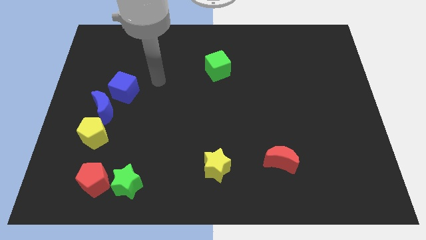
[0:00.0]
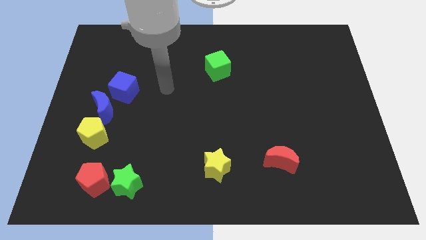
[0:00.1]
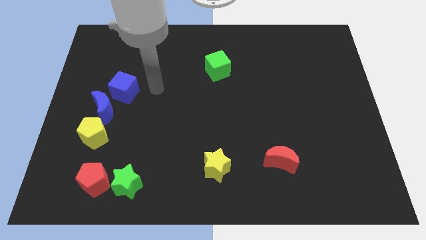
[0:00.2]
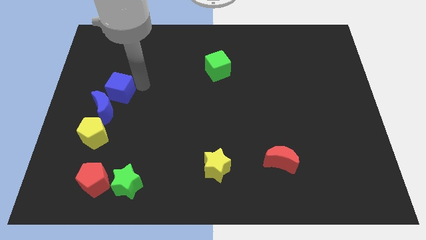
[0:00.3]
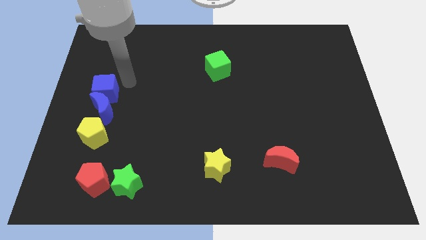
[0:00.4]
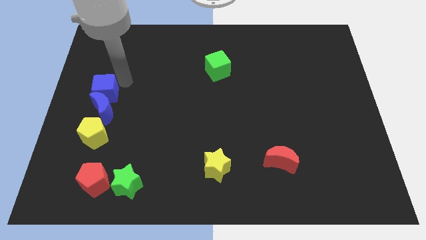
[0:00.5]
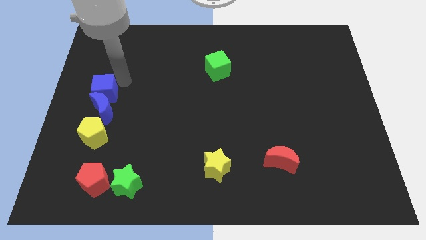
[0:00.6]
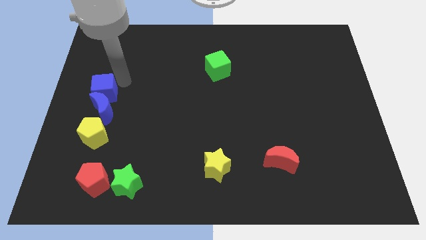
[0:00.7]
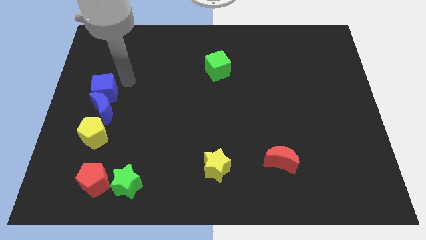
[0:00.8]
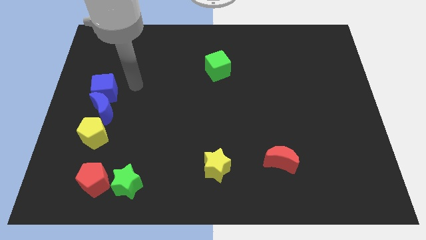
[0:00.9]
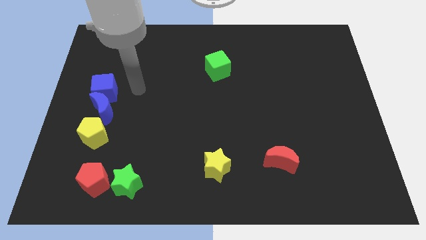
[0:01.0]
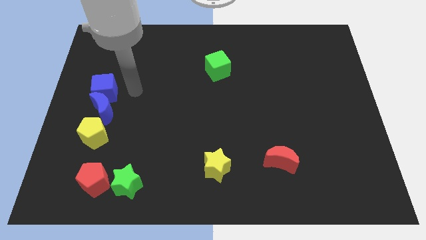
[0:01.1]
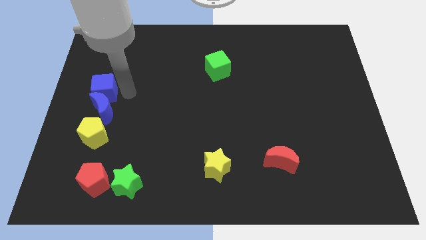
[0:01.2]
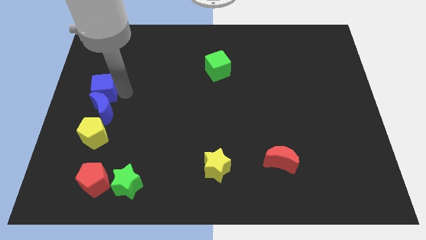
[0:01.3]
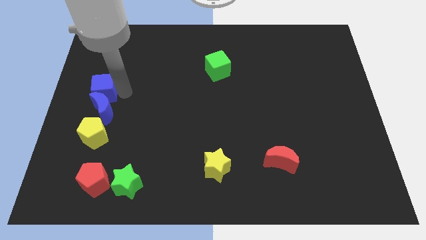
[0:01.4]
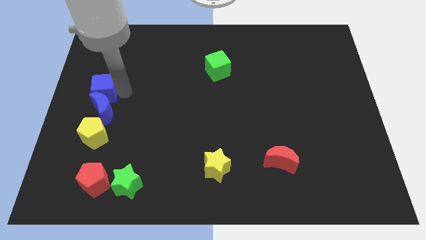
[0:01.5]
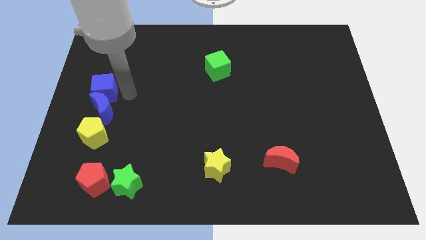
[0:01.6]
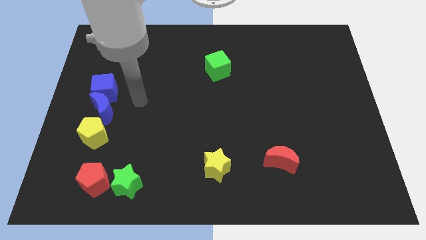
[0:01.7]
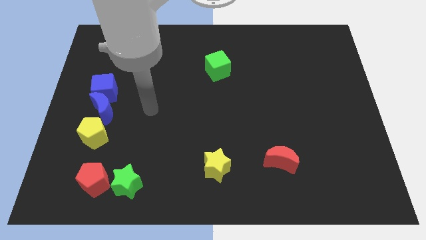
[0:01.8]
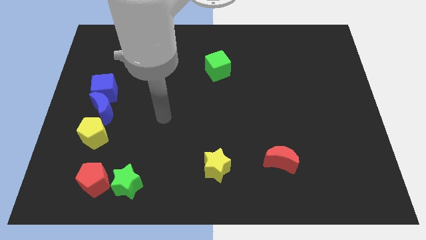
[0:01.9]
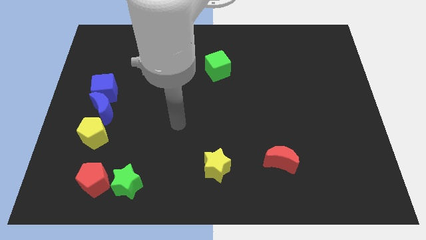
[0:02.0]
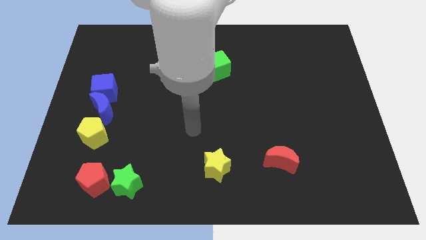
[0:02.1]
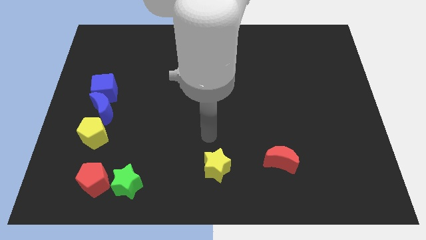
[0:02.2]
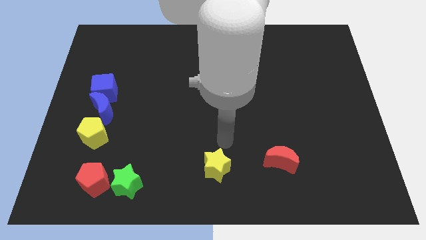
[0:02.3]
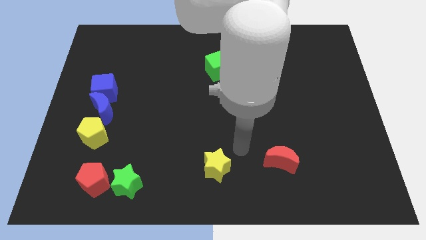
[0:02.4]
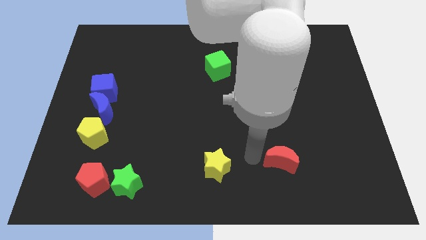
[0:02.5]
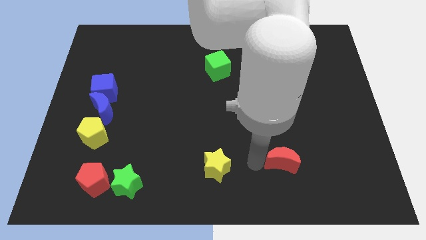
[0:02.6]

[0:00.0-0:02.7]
move the blue cube to the top of blue crescent

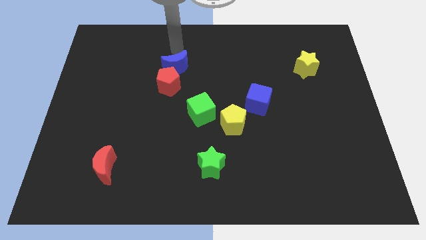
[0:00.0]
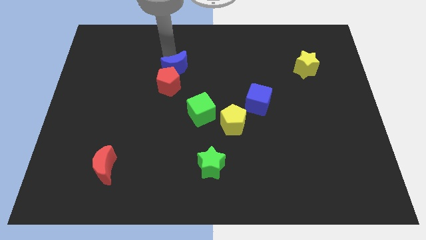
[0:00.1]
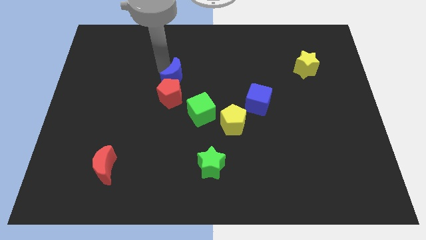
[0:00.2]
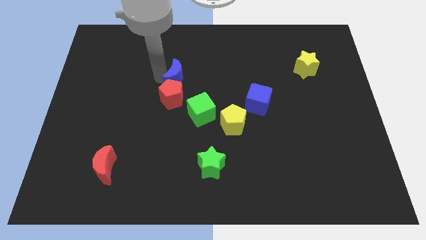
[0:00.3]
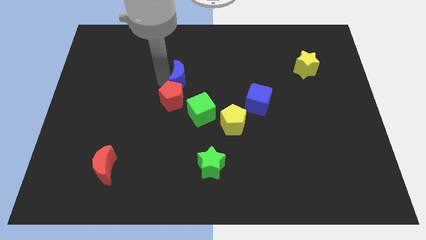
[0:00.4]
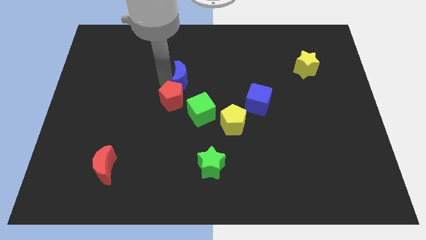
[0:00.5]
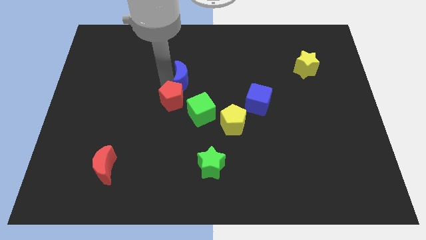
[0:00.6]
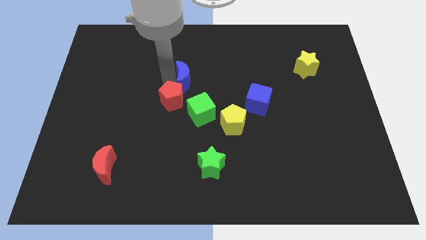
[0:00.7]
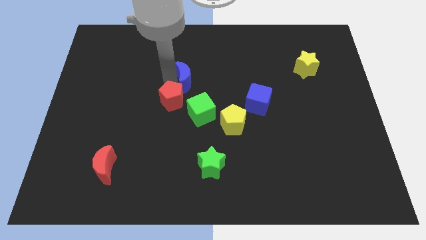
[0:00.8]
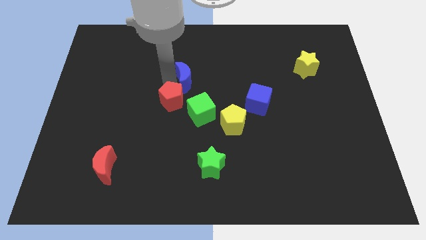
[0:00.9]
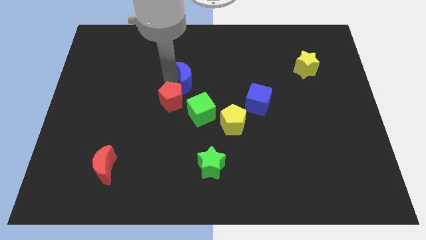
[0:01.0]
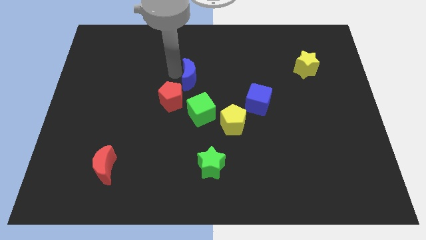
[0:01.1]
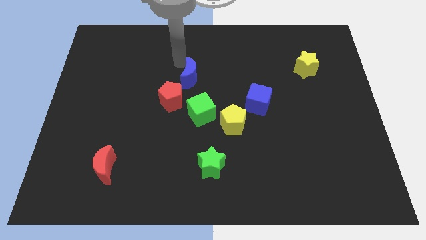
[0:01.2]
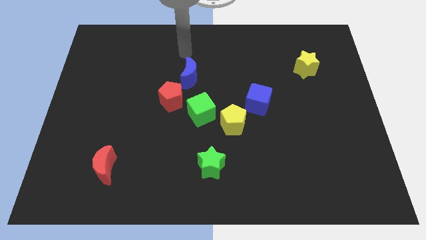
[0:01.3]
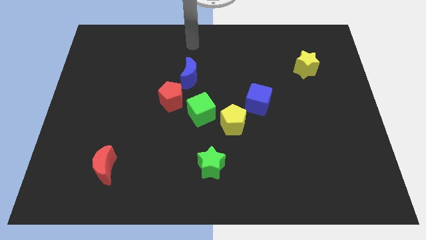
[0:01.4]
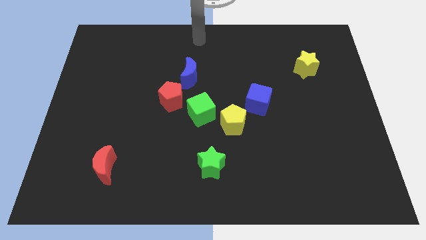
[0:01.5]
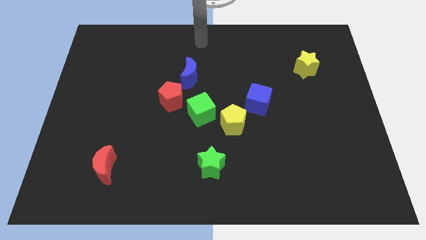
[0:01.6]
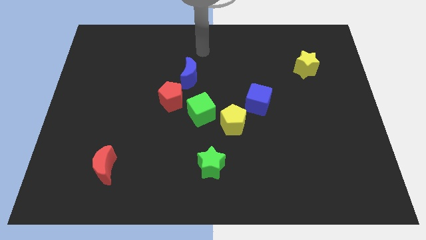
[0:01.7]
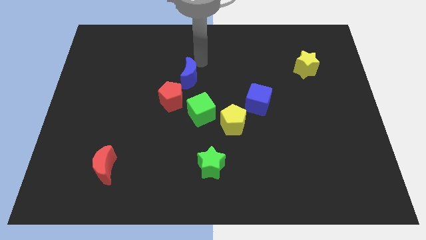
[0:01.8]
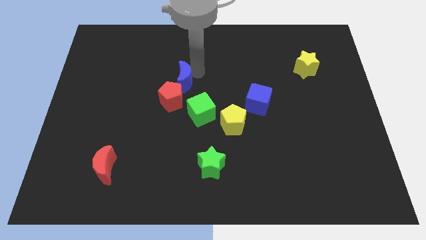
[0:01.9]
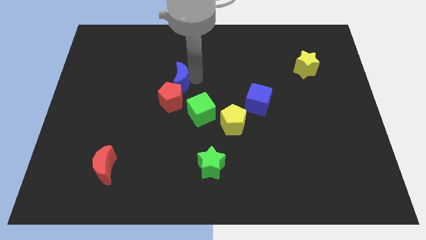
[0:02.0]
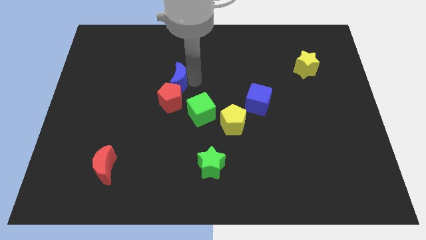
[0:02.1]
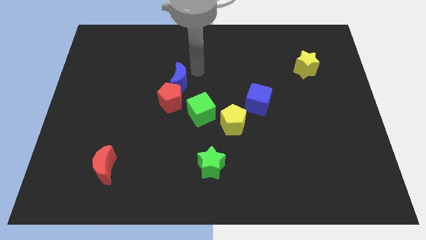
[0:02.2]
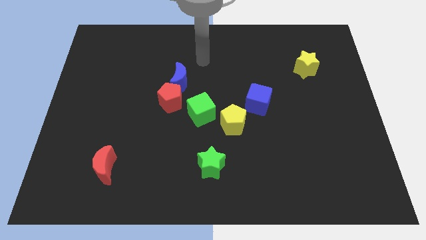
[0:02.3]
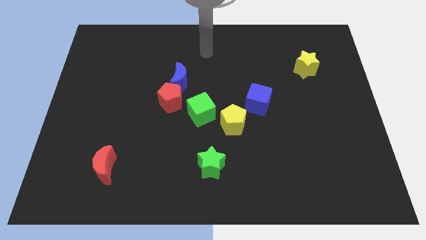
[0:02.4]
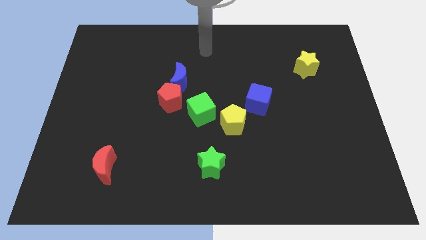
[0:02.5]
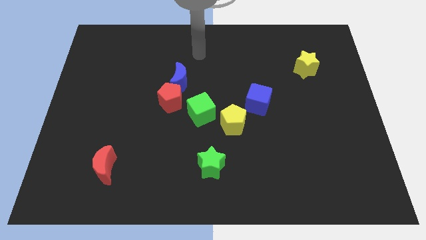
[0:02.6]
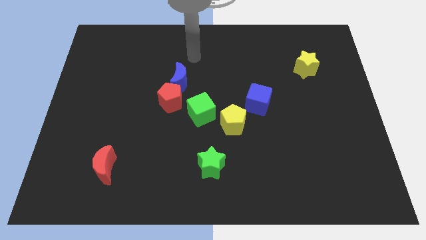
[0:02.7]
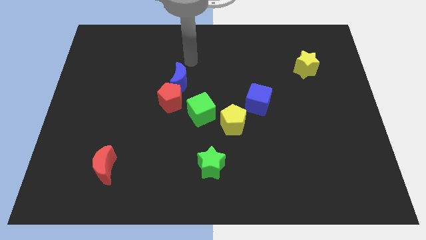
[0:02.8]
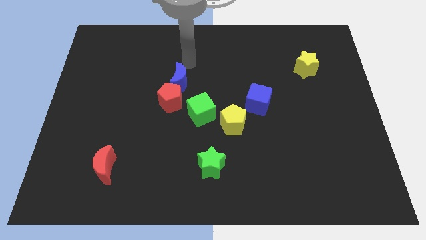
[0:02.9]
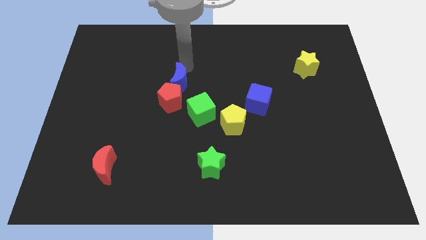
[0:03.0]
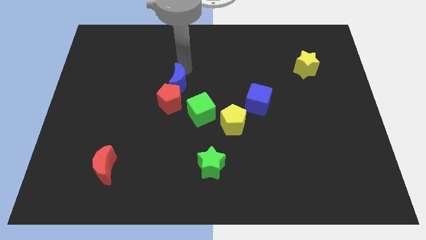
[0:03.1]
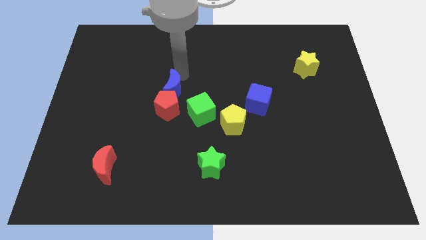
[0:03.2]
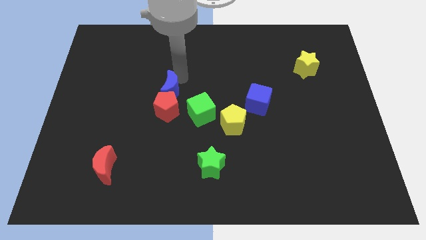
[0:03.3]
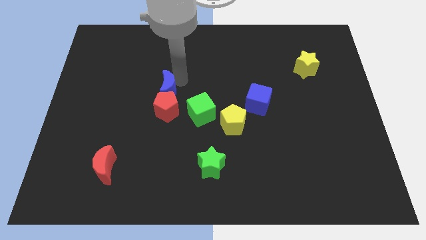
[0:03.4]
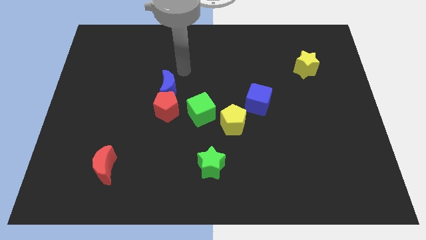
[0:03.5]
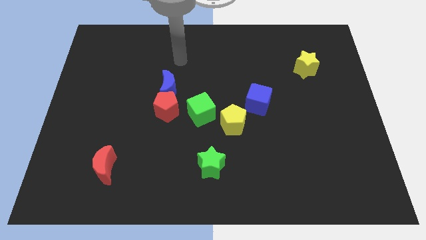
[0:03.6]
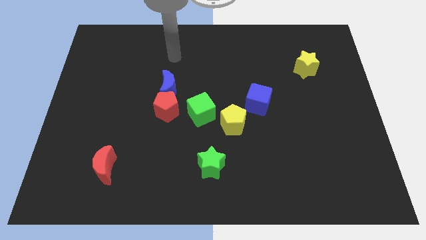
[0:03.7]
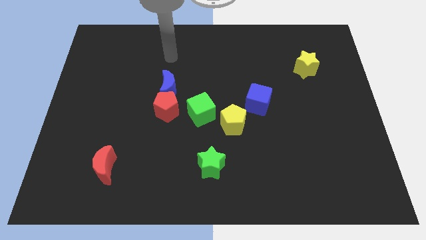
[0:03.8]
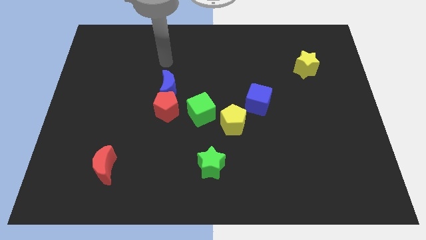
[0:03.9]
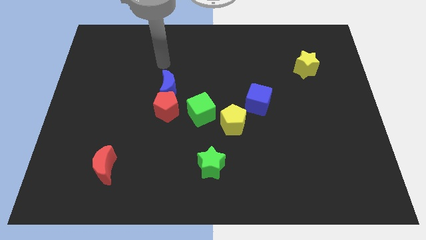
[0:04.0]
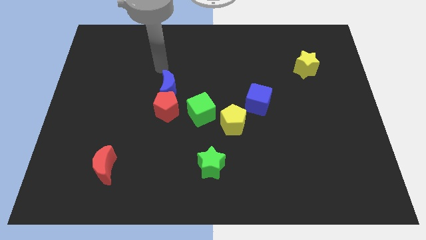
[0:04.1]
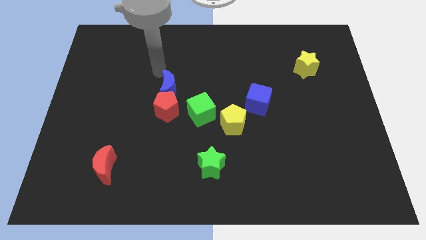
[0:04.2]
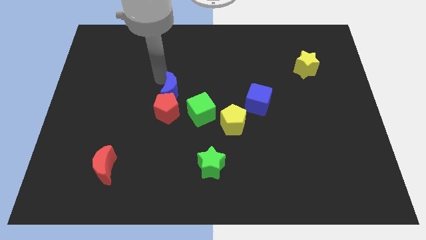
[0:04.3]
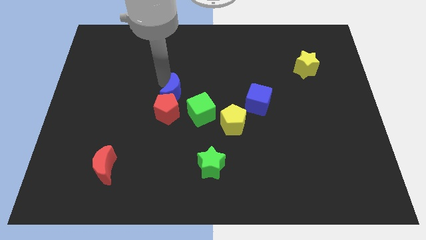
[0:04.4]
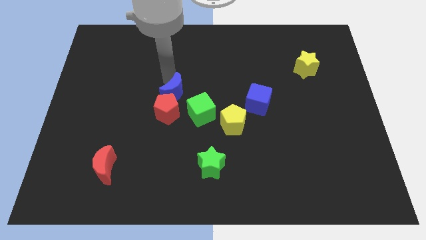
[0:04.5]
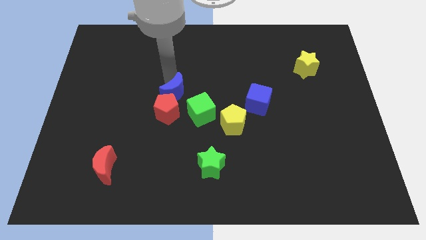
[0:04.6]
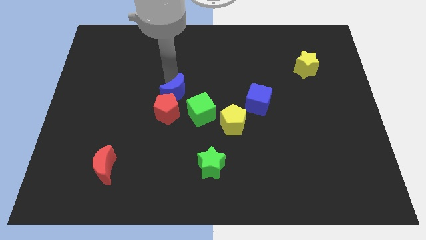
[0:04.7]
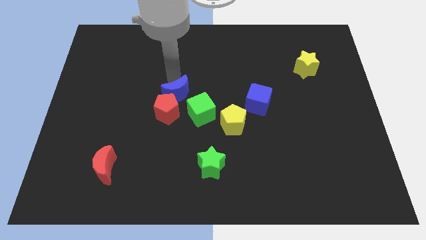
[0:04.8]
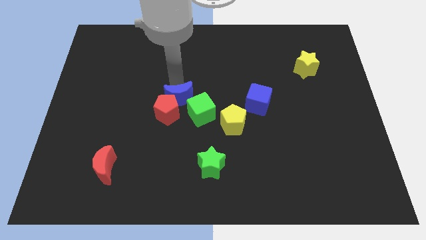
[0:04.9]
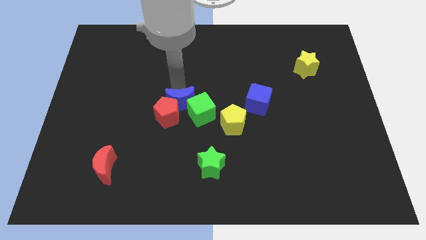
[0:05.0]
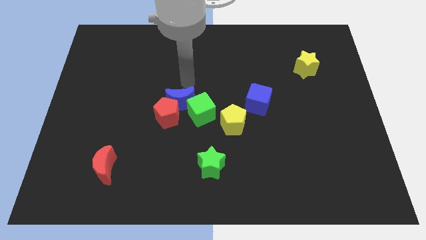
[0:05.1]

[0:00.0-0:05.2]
push the blue moon into the red pentagon

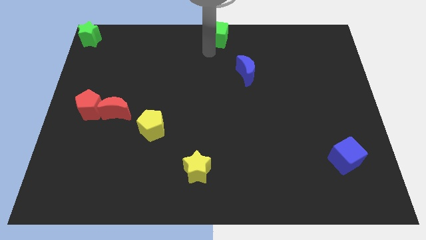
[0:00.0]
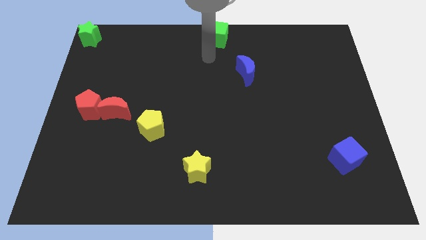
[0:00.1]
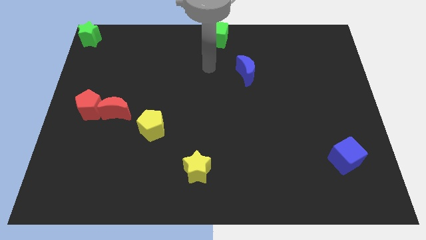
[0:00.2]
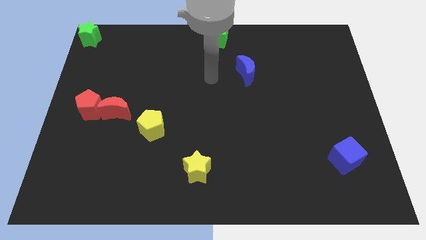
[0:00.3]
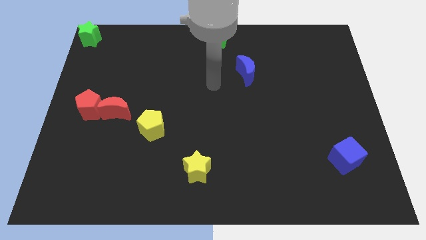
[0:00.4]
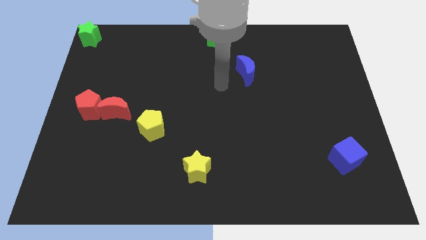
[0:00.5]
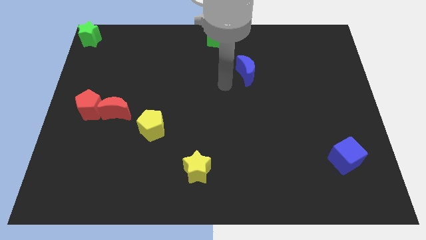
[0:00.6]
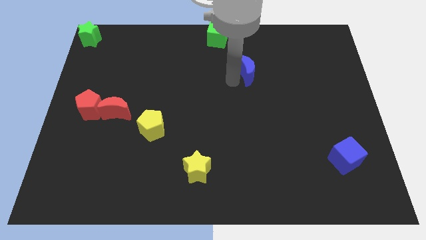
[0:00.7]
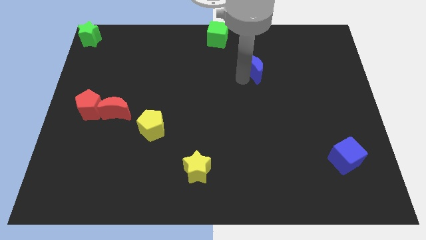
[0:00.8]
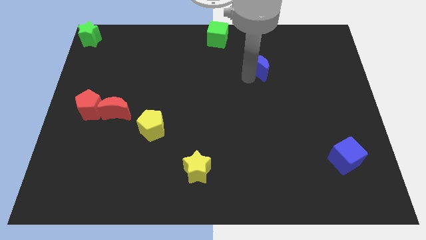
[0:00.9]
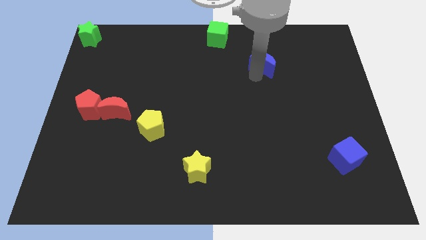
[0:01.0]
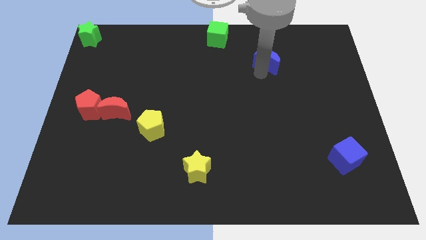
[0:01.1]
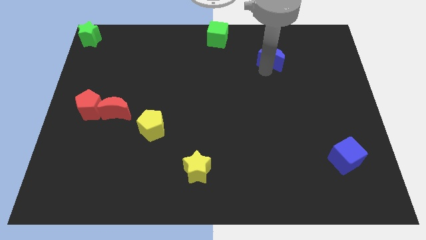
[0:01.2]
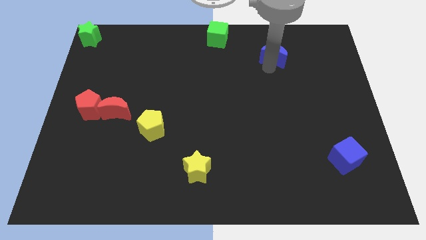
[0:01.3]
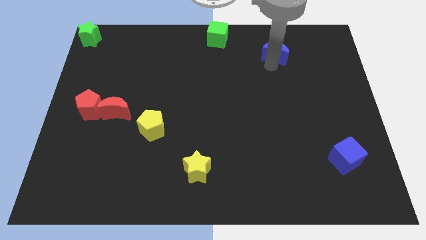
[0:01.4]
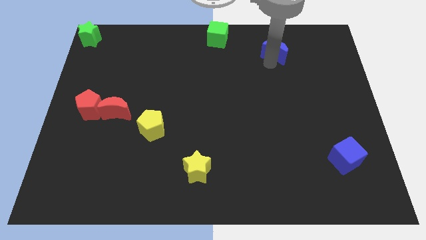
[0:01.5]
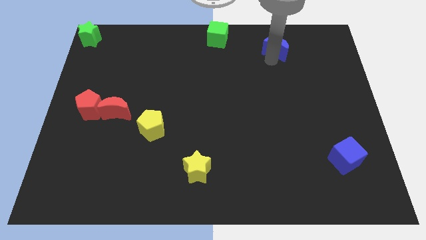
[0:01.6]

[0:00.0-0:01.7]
push the blue crescent towards up
